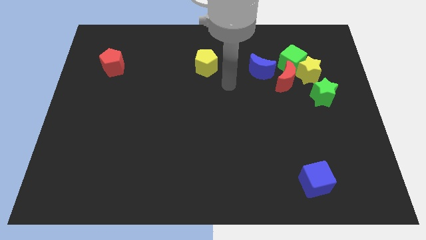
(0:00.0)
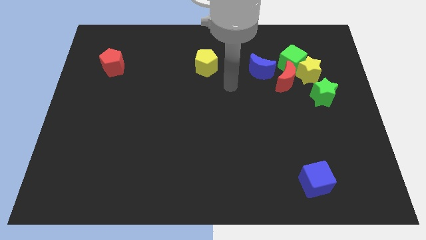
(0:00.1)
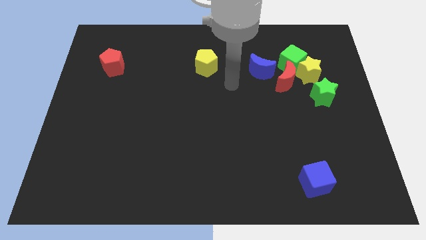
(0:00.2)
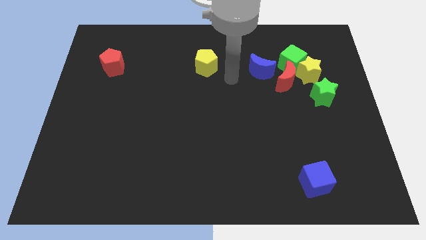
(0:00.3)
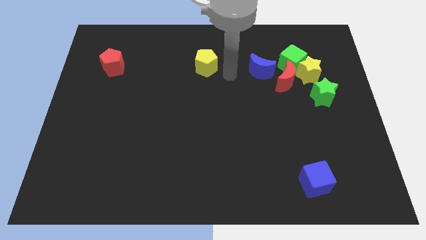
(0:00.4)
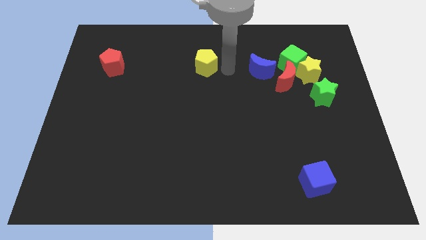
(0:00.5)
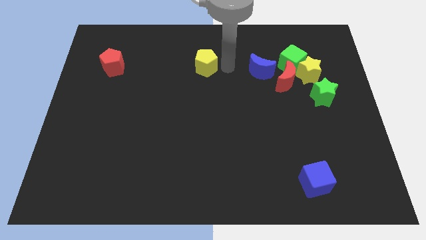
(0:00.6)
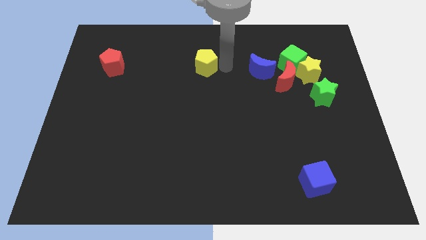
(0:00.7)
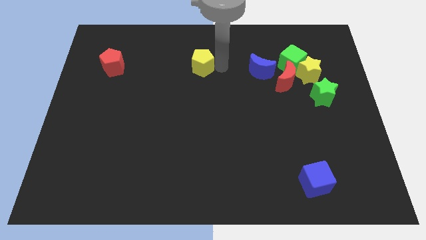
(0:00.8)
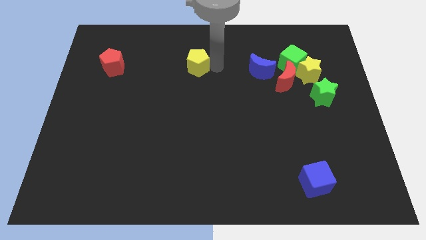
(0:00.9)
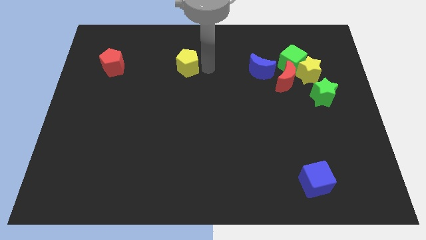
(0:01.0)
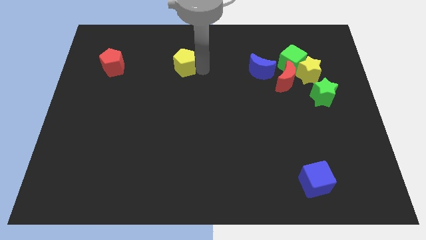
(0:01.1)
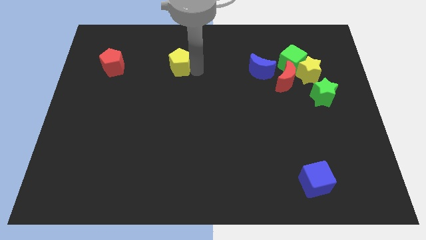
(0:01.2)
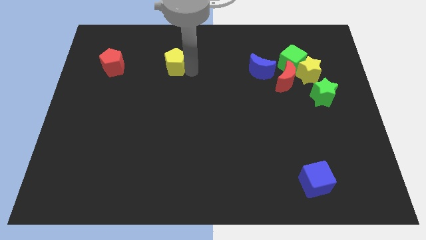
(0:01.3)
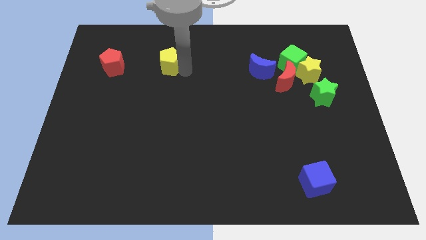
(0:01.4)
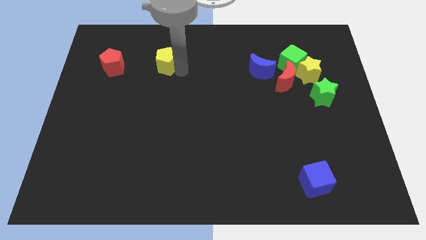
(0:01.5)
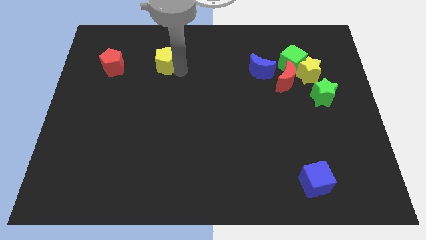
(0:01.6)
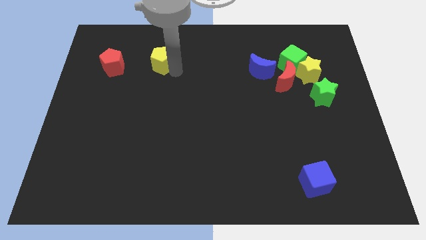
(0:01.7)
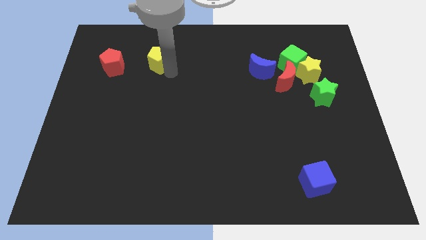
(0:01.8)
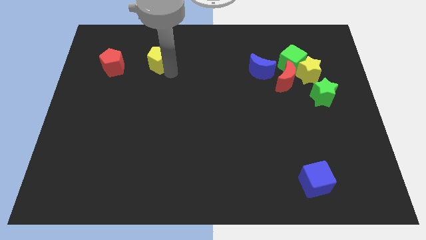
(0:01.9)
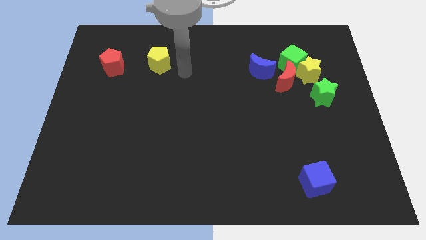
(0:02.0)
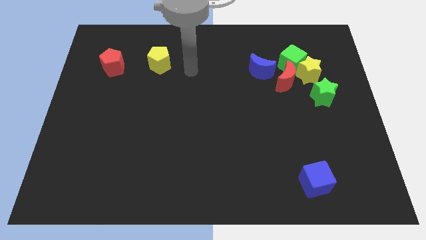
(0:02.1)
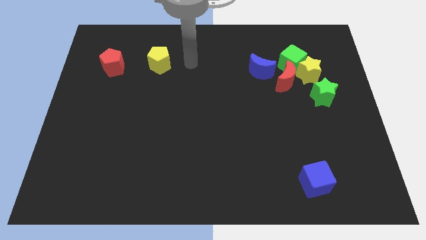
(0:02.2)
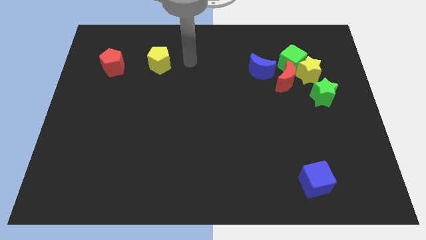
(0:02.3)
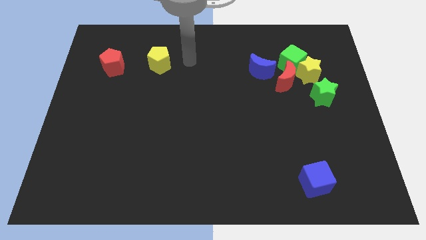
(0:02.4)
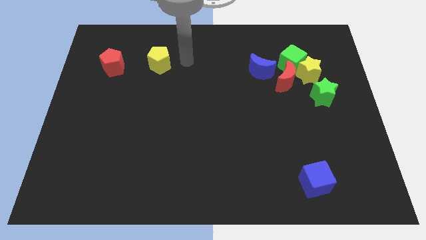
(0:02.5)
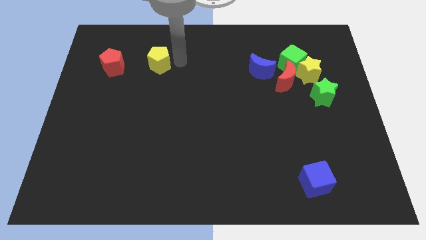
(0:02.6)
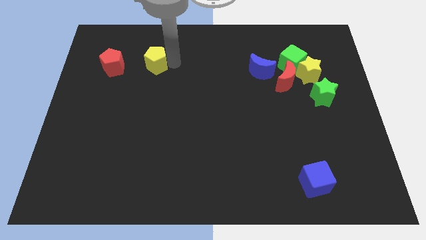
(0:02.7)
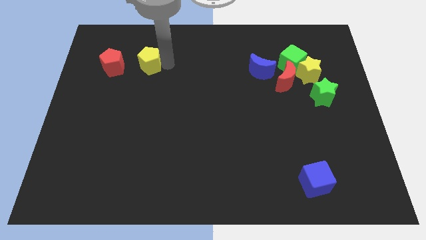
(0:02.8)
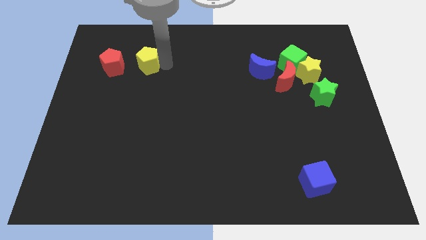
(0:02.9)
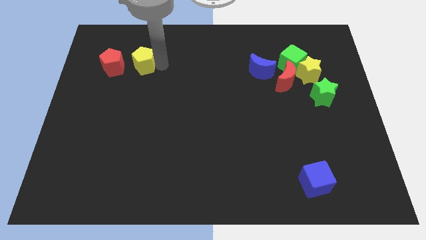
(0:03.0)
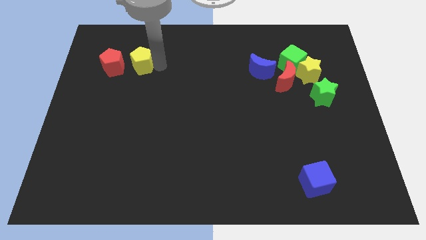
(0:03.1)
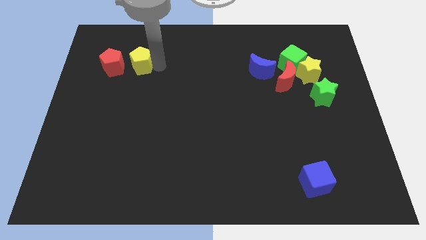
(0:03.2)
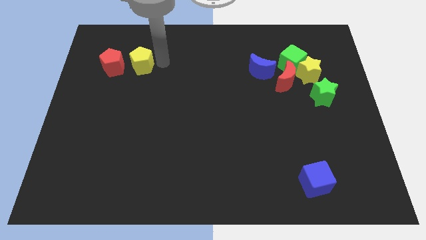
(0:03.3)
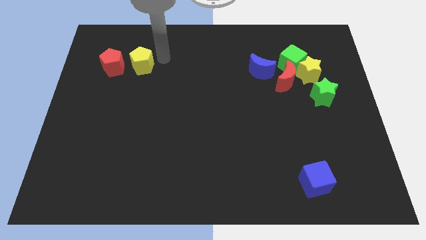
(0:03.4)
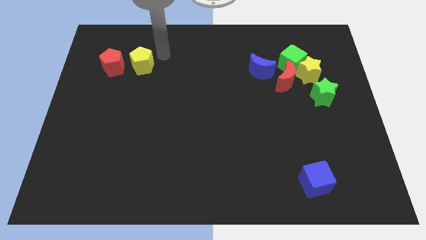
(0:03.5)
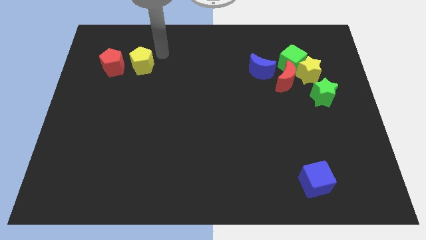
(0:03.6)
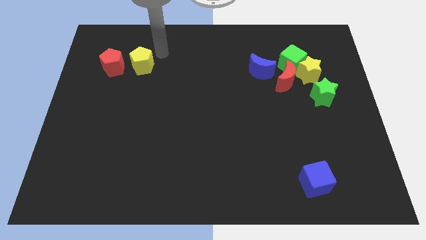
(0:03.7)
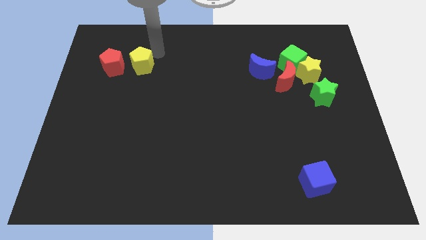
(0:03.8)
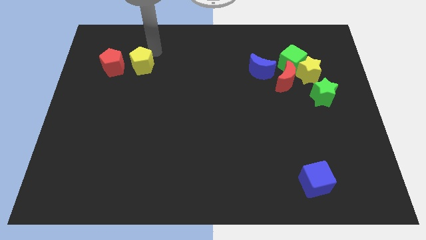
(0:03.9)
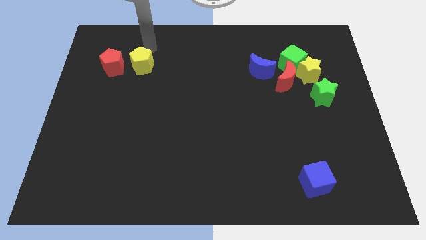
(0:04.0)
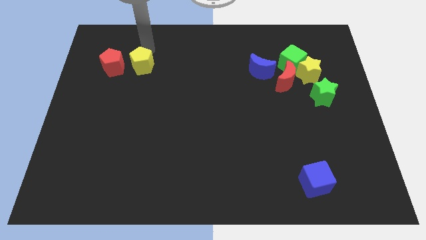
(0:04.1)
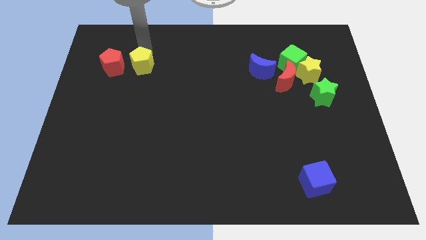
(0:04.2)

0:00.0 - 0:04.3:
push the yellow pentagon to the right of the red pentagon

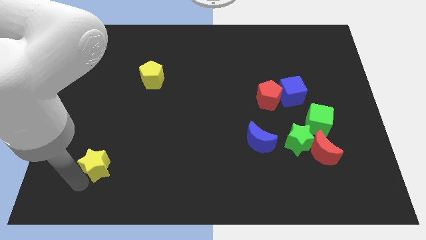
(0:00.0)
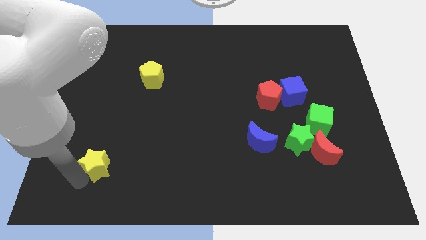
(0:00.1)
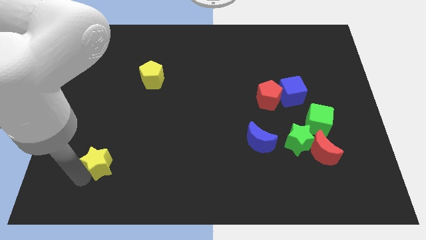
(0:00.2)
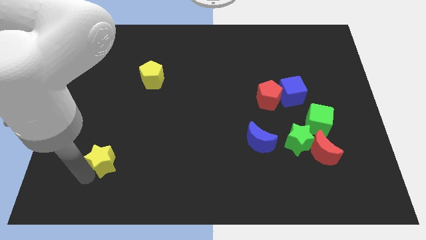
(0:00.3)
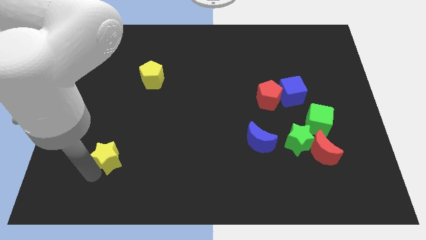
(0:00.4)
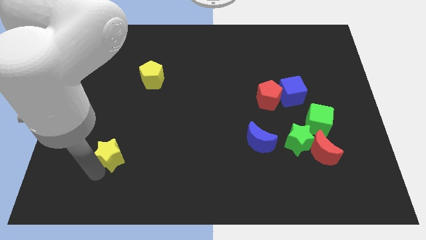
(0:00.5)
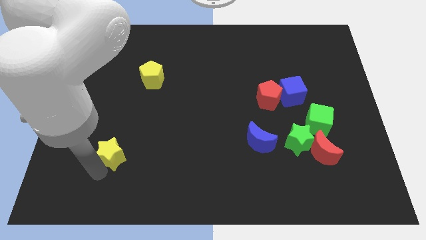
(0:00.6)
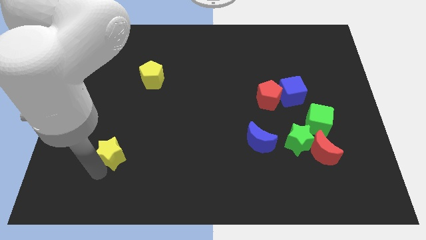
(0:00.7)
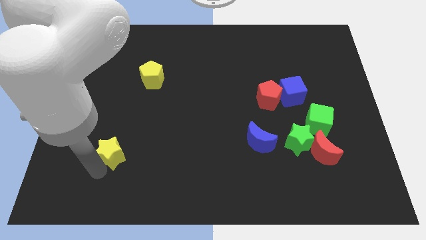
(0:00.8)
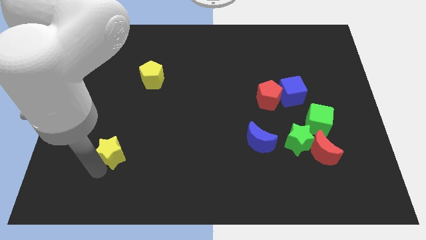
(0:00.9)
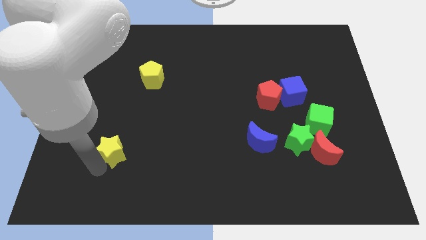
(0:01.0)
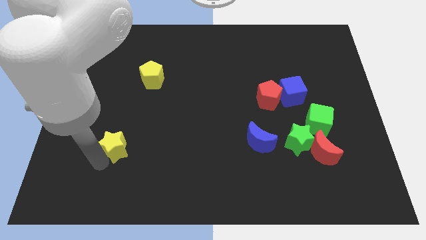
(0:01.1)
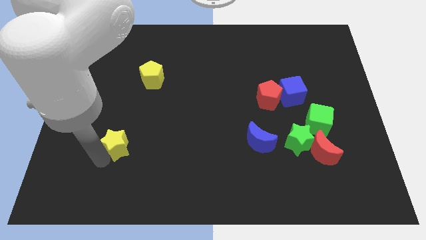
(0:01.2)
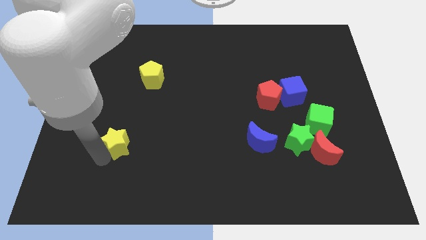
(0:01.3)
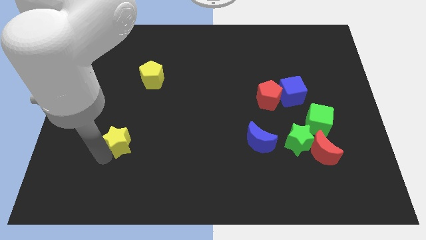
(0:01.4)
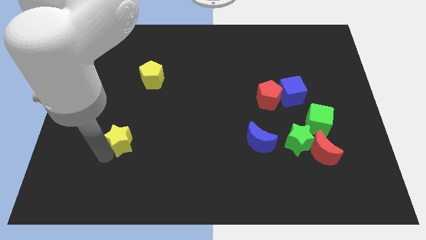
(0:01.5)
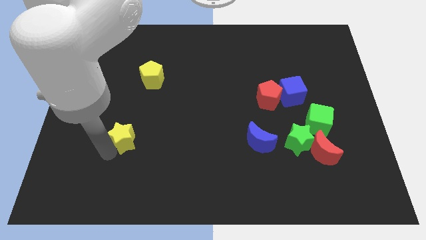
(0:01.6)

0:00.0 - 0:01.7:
move the yellow star horizontally to the left of the blue moon

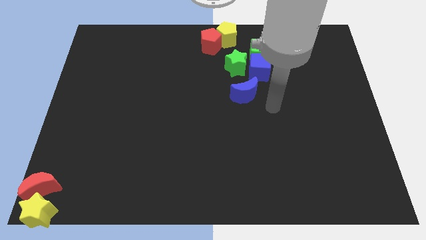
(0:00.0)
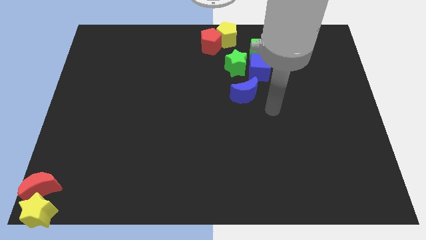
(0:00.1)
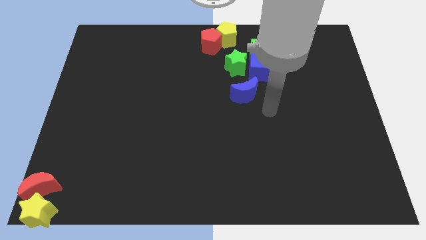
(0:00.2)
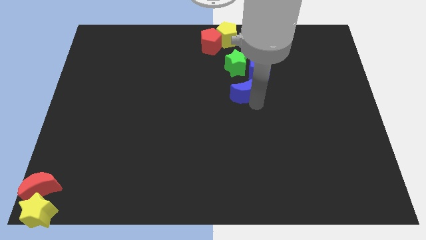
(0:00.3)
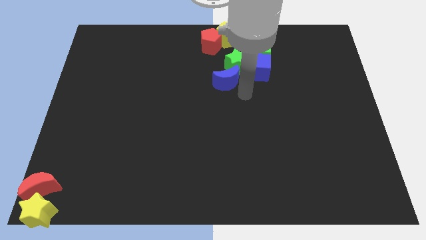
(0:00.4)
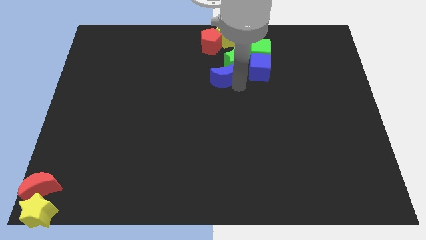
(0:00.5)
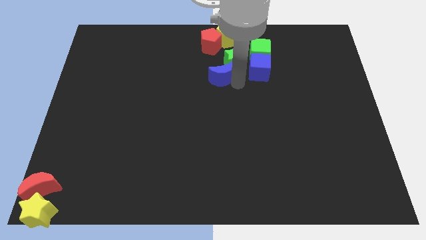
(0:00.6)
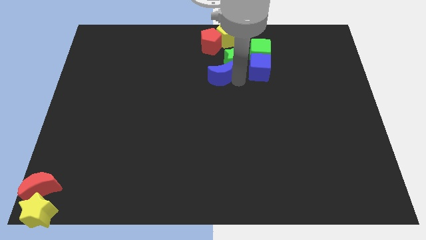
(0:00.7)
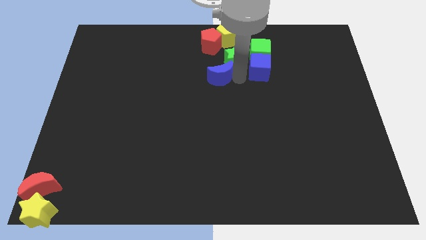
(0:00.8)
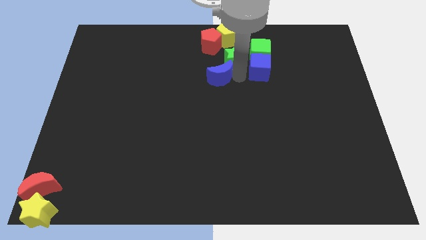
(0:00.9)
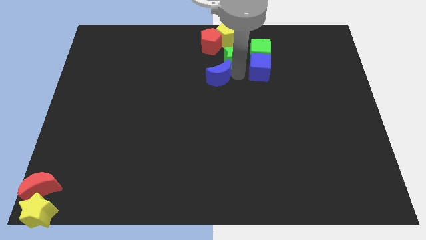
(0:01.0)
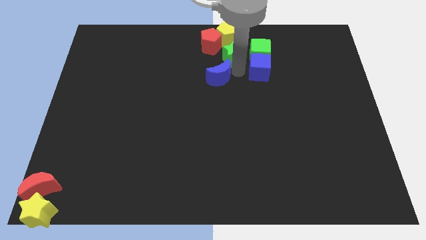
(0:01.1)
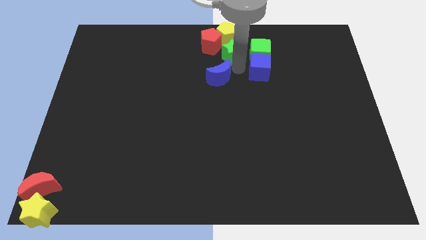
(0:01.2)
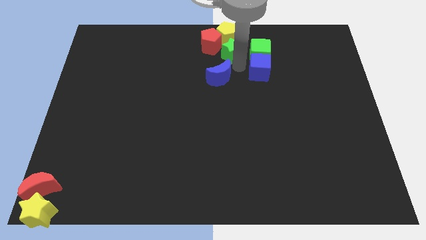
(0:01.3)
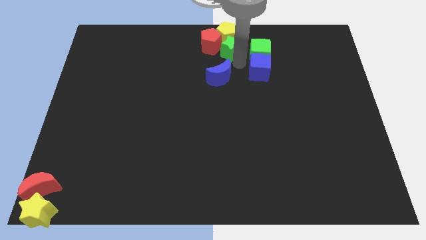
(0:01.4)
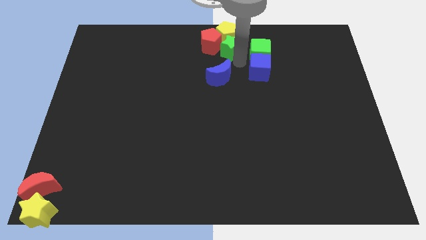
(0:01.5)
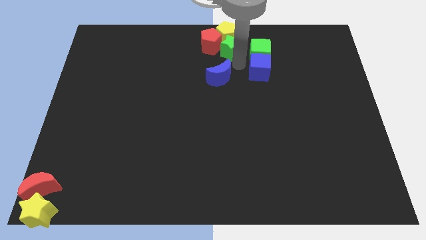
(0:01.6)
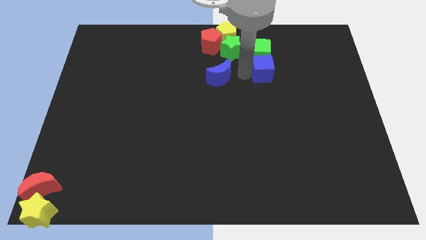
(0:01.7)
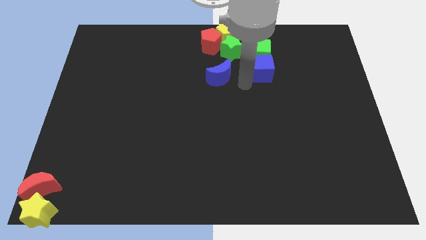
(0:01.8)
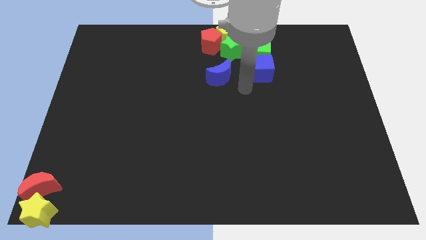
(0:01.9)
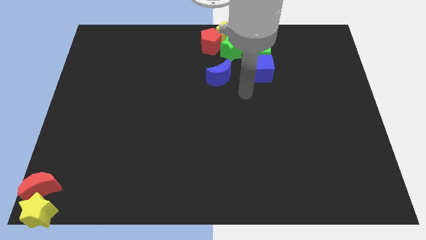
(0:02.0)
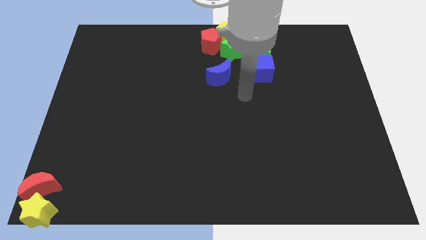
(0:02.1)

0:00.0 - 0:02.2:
slide the green star at the bottom of the yellow pentagon

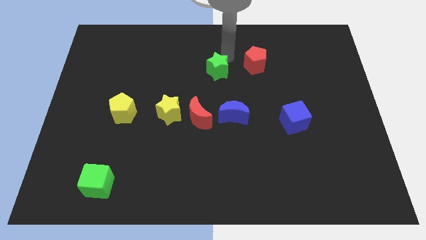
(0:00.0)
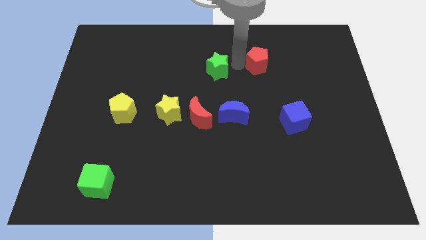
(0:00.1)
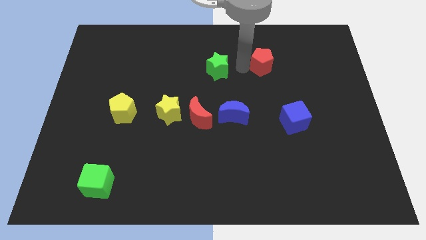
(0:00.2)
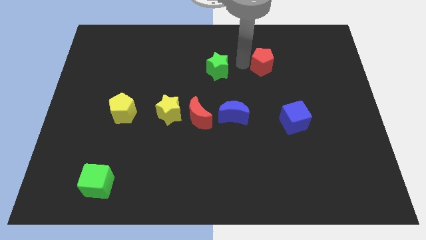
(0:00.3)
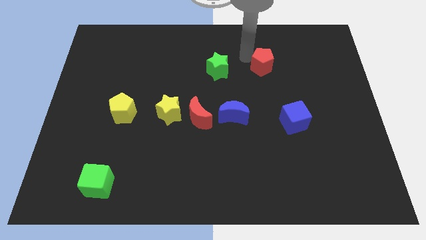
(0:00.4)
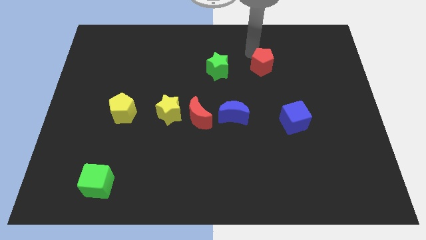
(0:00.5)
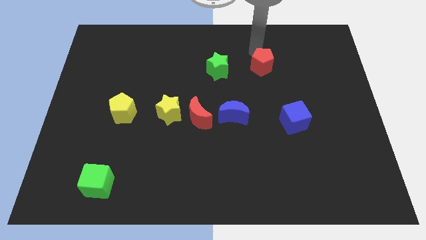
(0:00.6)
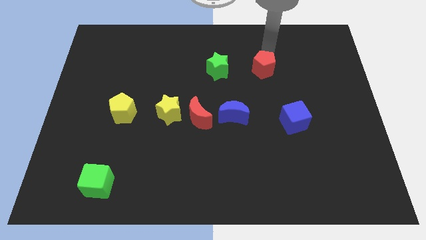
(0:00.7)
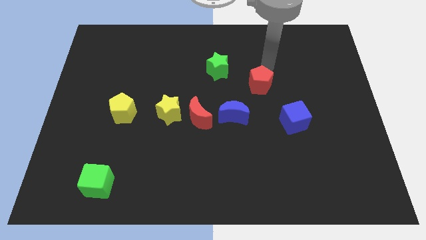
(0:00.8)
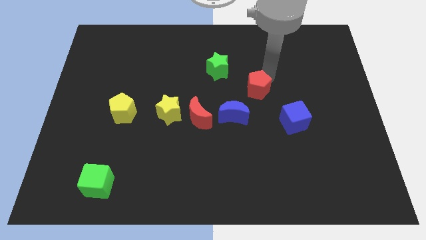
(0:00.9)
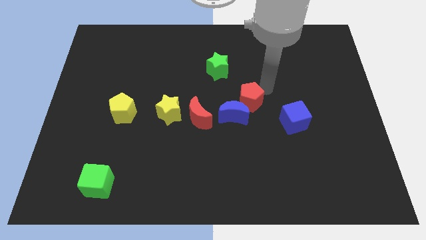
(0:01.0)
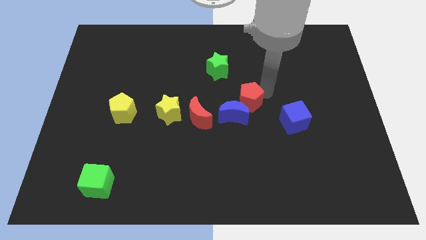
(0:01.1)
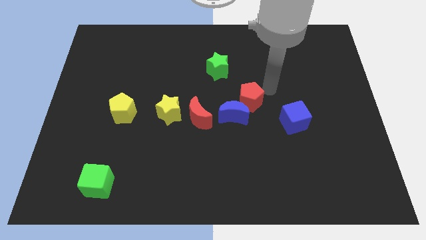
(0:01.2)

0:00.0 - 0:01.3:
move red pentagon above blue crescent
